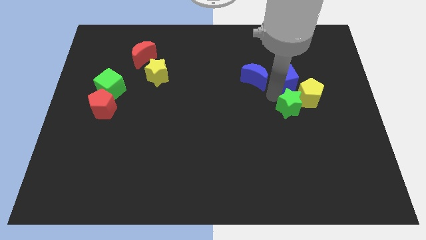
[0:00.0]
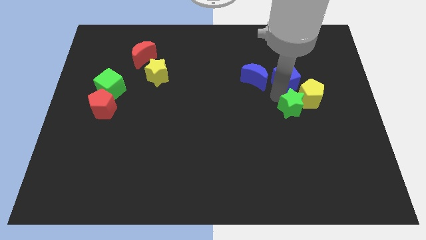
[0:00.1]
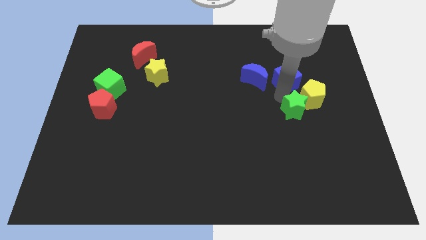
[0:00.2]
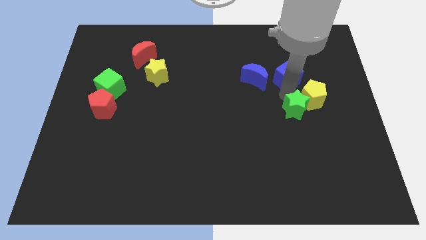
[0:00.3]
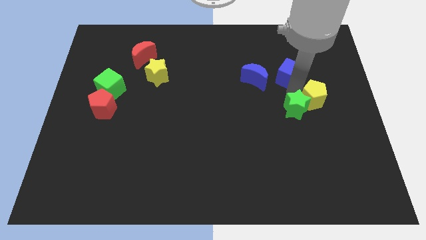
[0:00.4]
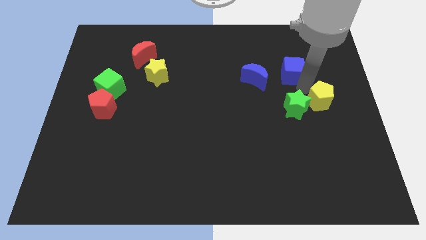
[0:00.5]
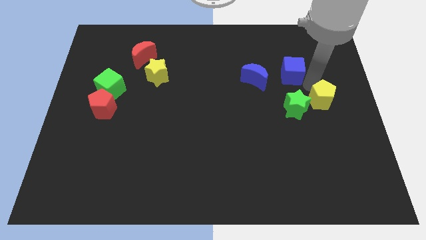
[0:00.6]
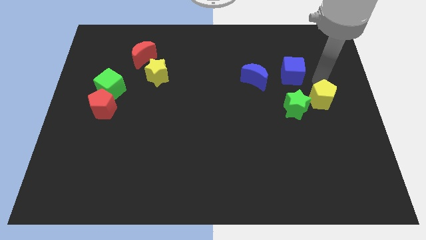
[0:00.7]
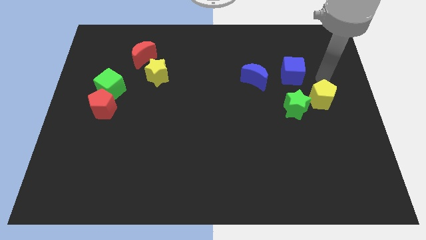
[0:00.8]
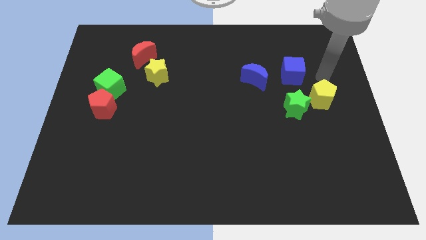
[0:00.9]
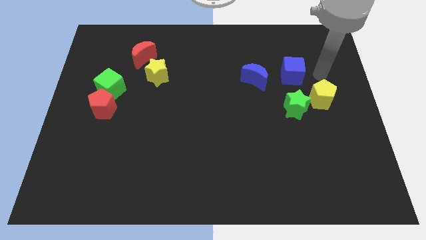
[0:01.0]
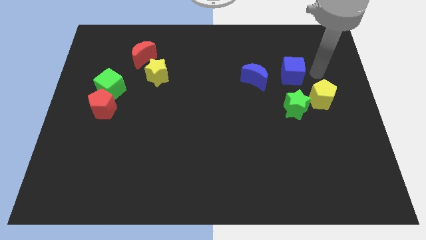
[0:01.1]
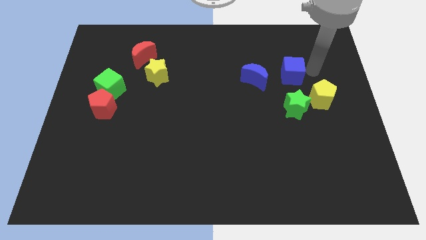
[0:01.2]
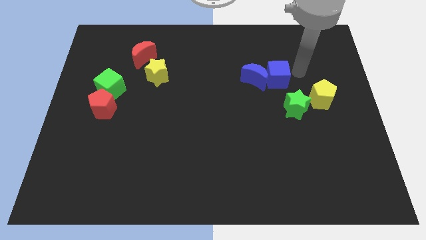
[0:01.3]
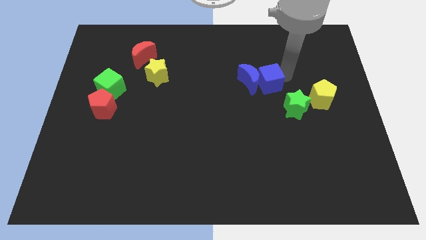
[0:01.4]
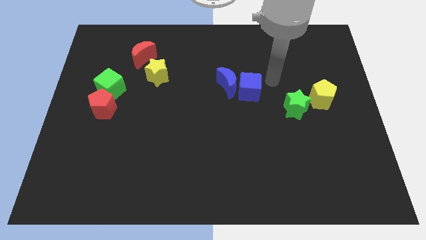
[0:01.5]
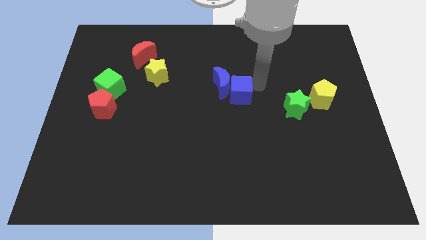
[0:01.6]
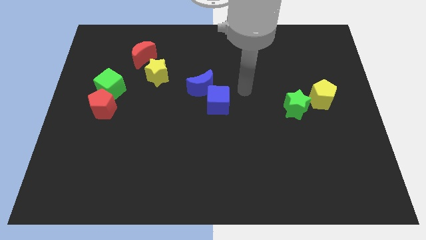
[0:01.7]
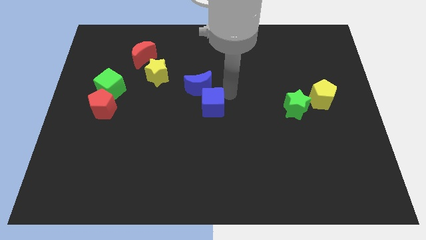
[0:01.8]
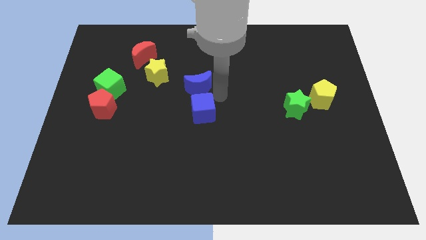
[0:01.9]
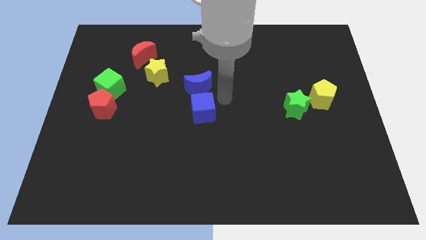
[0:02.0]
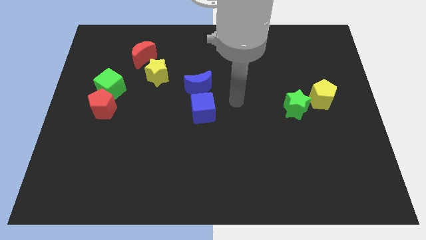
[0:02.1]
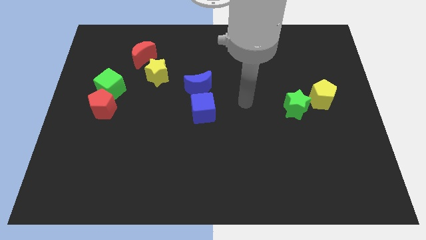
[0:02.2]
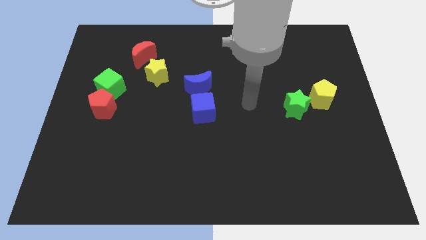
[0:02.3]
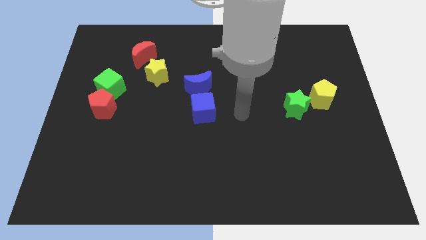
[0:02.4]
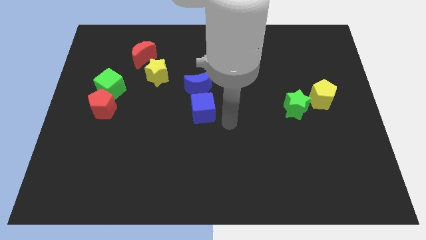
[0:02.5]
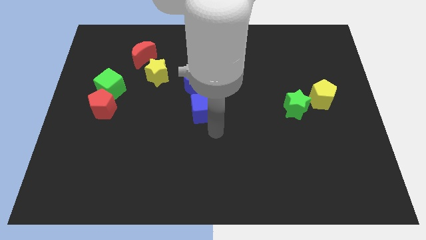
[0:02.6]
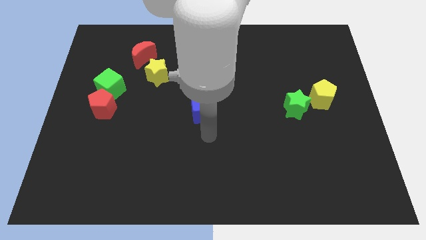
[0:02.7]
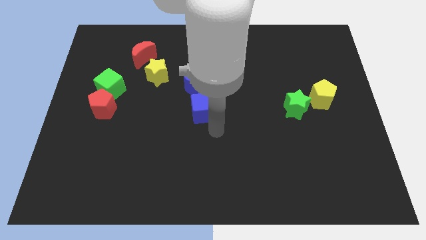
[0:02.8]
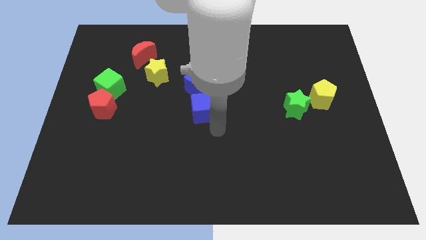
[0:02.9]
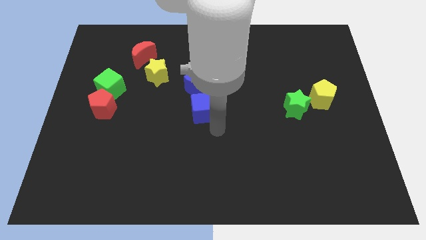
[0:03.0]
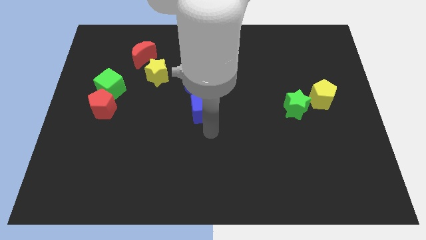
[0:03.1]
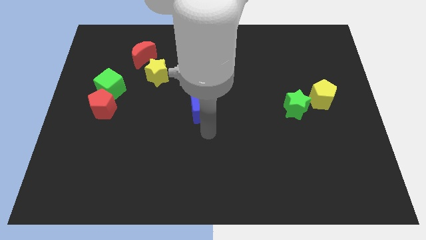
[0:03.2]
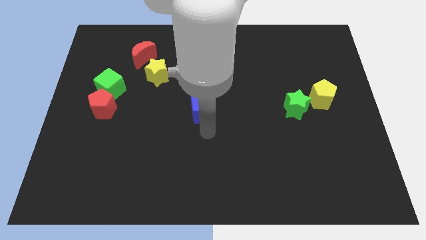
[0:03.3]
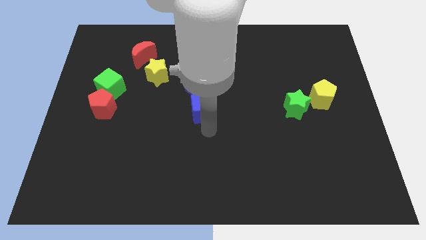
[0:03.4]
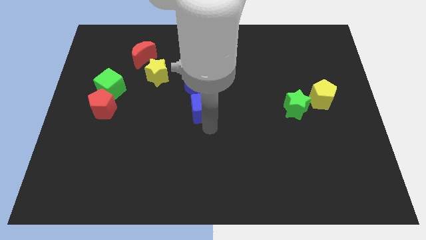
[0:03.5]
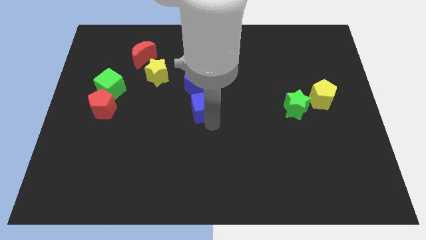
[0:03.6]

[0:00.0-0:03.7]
place the blue cube down to the blue moon

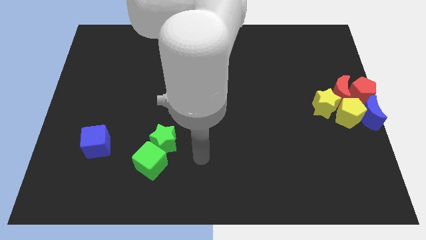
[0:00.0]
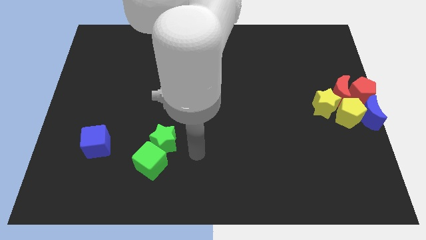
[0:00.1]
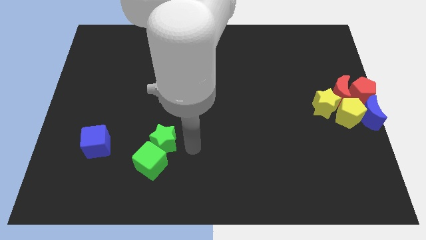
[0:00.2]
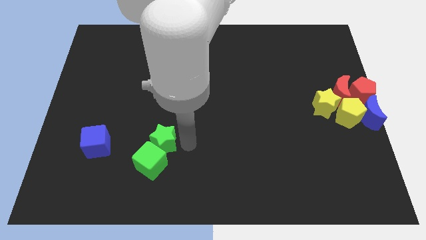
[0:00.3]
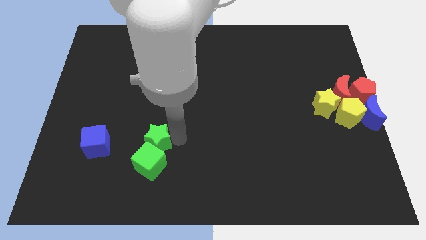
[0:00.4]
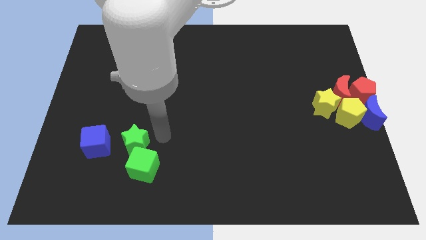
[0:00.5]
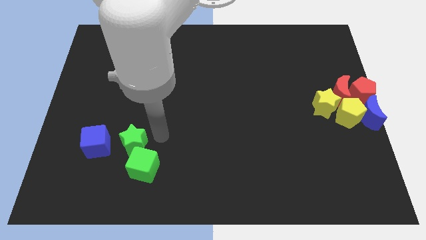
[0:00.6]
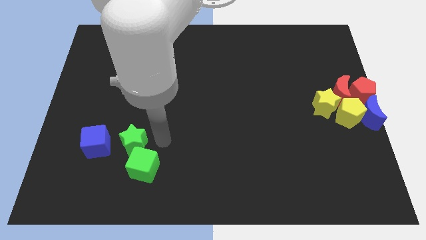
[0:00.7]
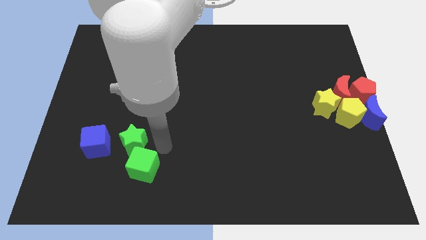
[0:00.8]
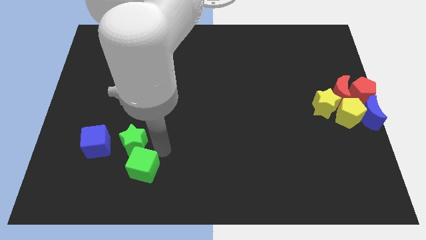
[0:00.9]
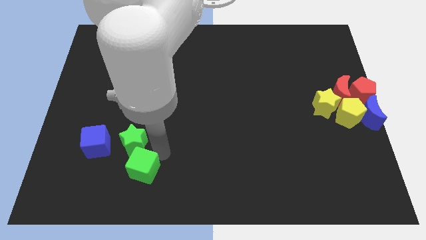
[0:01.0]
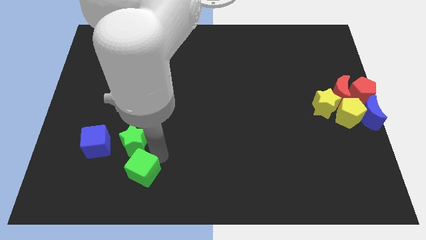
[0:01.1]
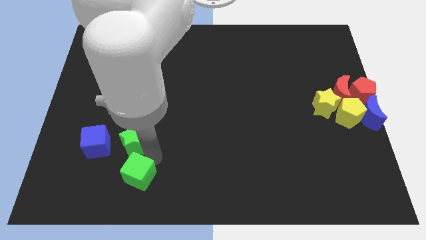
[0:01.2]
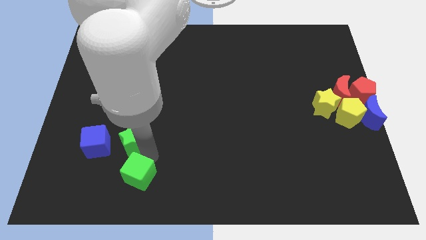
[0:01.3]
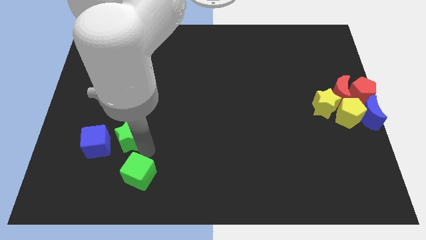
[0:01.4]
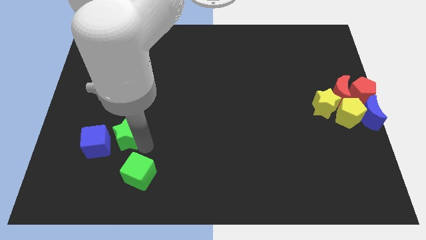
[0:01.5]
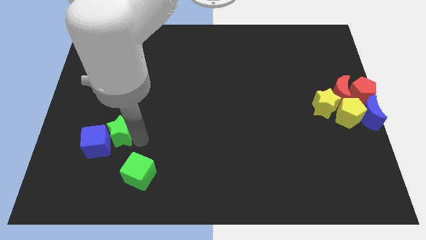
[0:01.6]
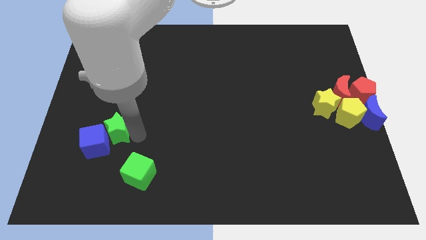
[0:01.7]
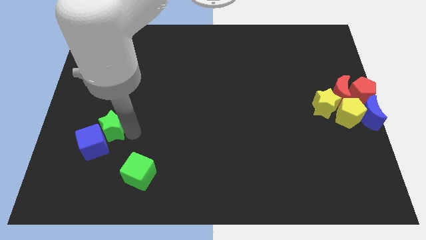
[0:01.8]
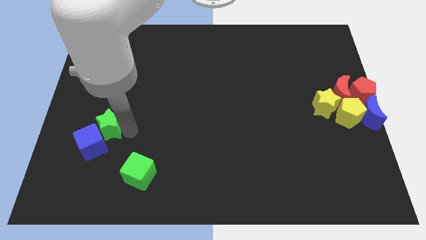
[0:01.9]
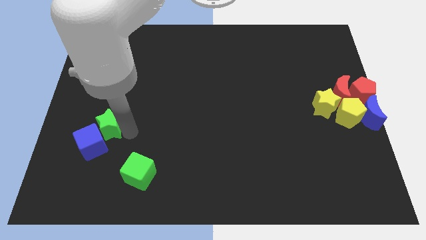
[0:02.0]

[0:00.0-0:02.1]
separate green star from green cube

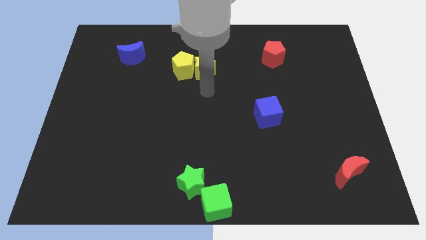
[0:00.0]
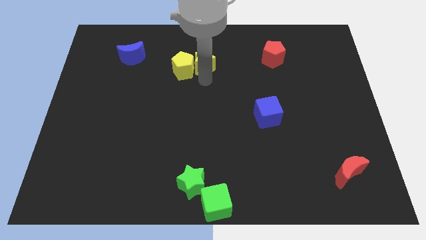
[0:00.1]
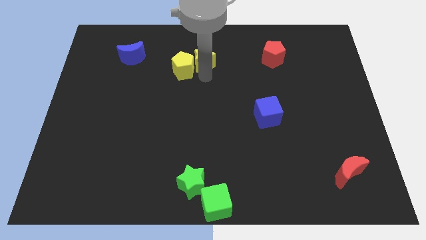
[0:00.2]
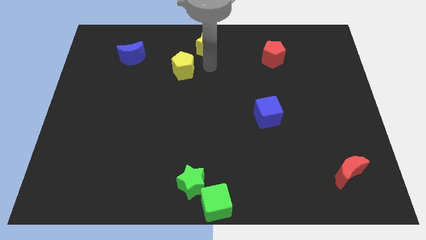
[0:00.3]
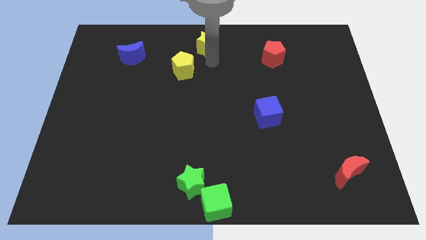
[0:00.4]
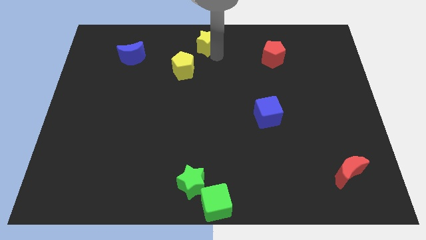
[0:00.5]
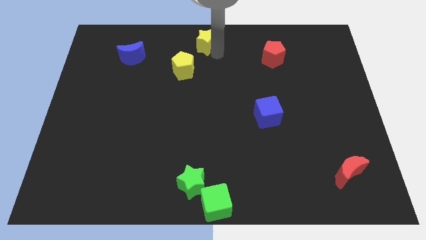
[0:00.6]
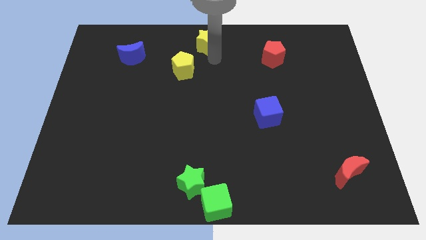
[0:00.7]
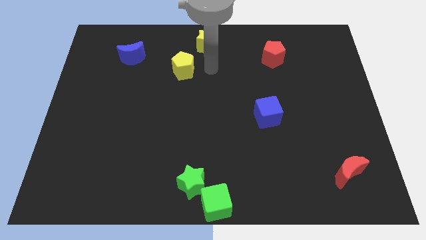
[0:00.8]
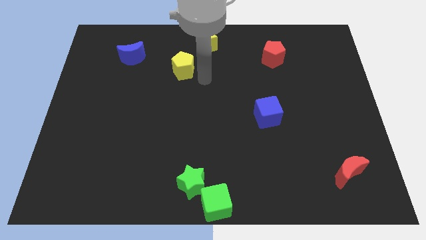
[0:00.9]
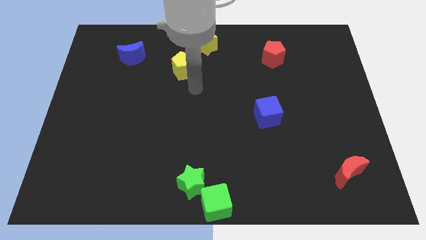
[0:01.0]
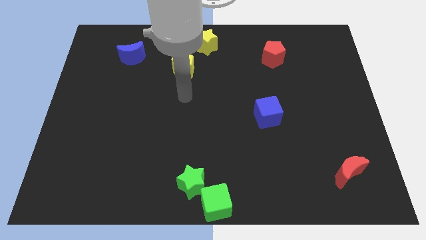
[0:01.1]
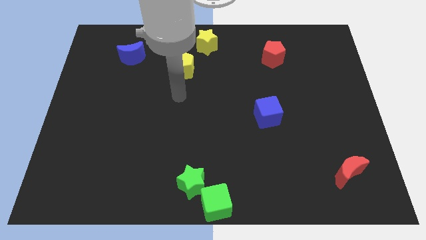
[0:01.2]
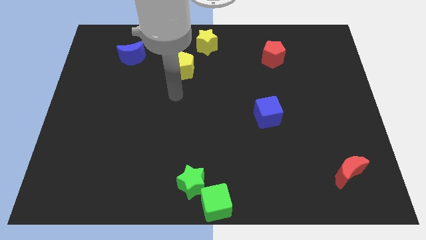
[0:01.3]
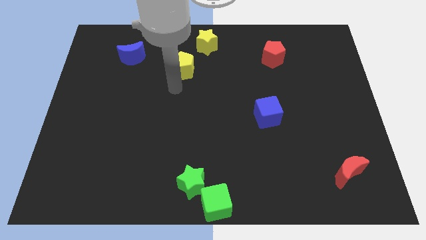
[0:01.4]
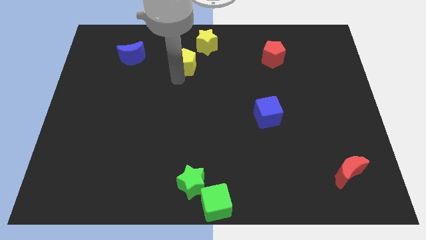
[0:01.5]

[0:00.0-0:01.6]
slide the yellow star to the top

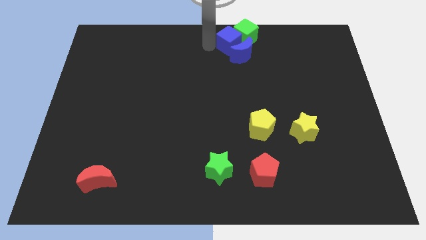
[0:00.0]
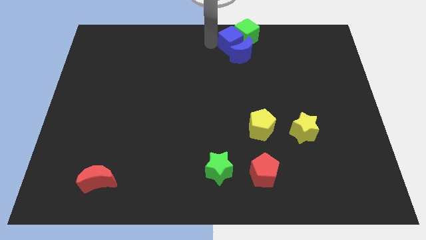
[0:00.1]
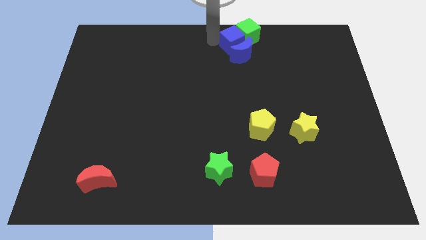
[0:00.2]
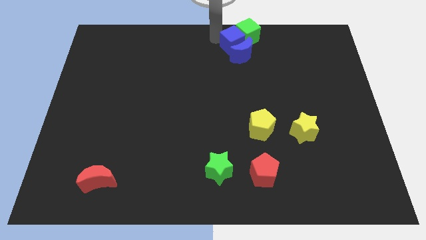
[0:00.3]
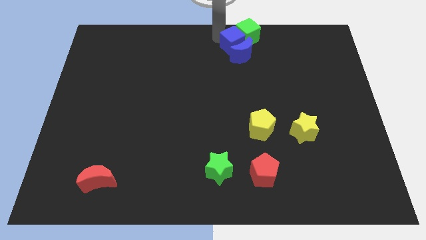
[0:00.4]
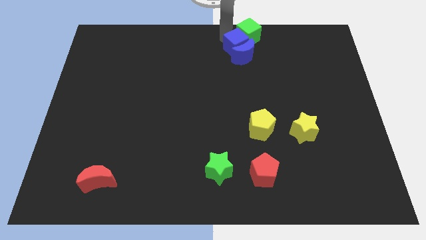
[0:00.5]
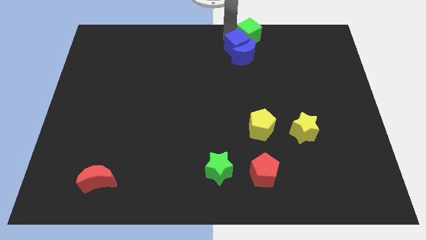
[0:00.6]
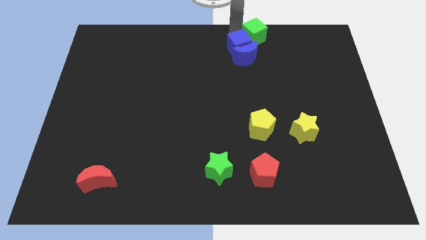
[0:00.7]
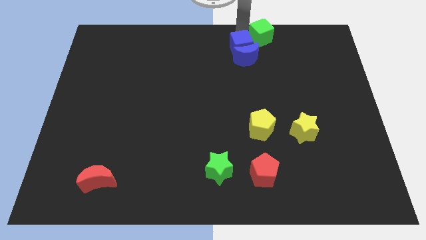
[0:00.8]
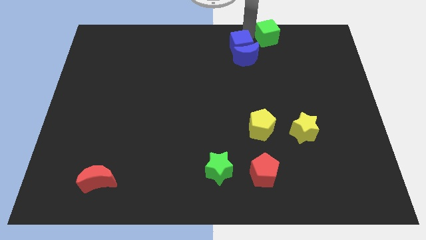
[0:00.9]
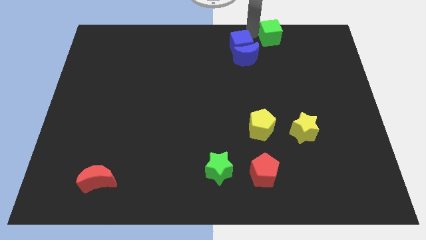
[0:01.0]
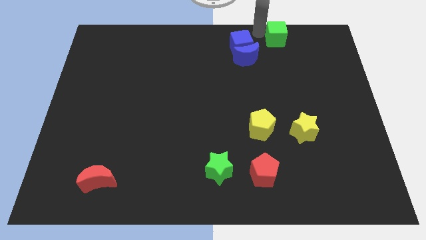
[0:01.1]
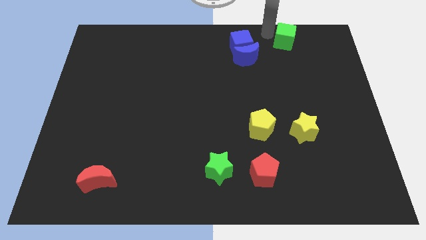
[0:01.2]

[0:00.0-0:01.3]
push the green cube towards top right
